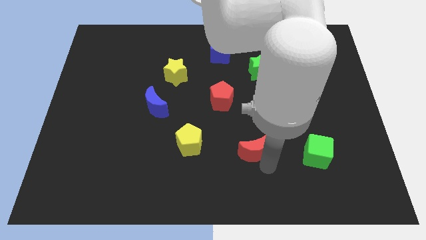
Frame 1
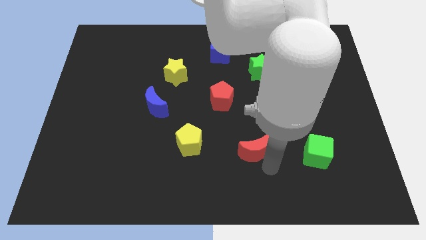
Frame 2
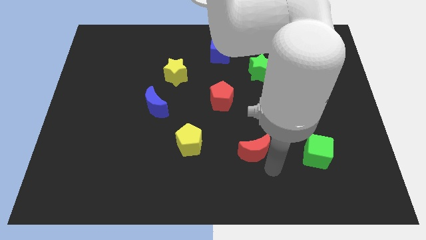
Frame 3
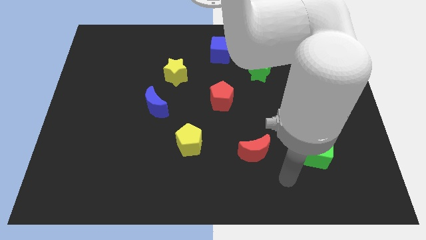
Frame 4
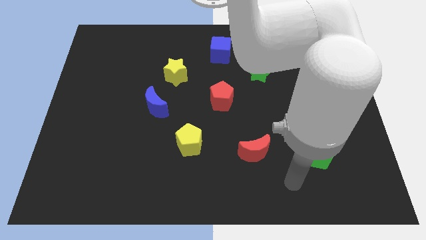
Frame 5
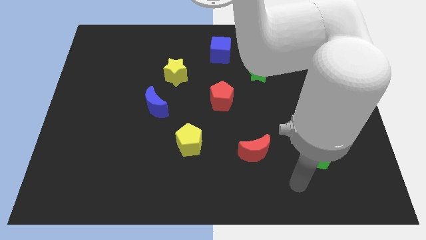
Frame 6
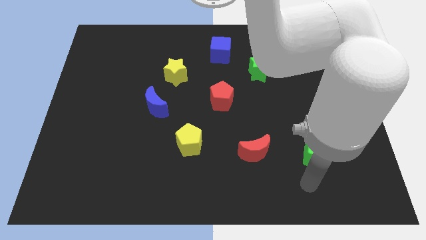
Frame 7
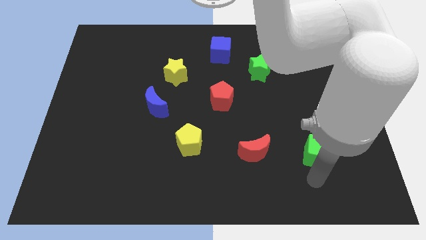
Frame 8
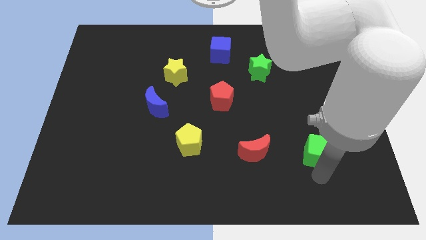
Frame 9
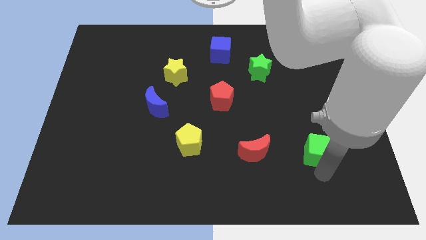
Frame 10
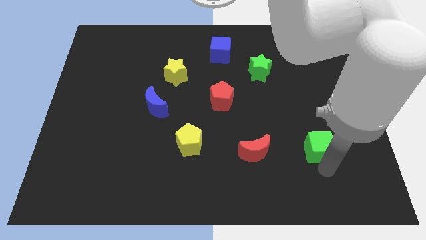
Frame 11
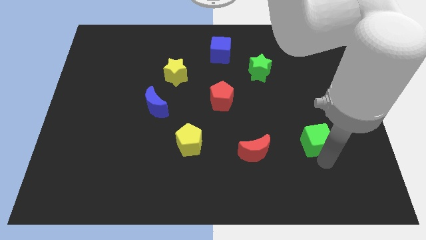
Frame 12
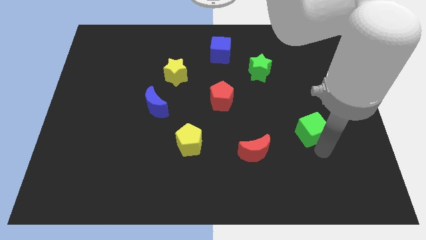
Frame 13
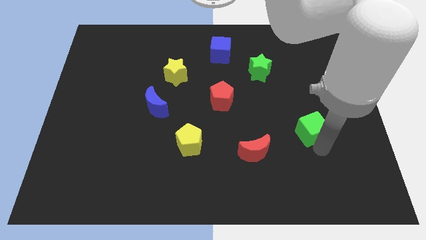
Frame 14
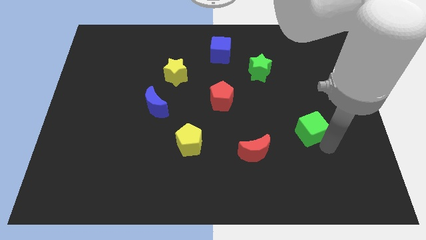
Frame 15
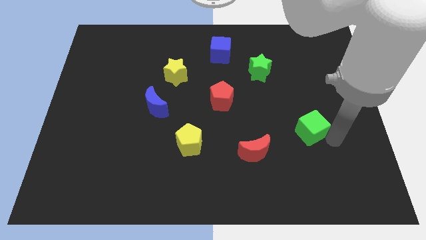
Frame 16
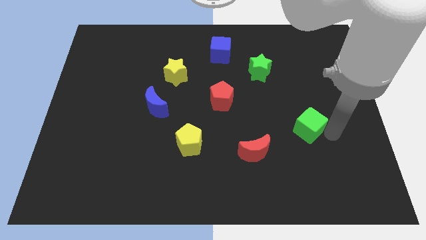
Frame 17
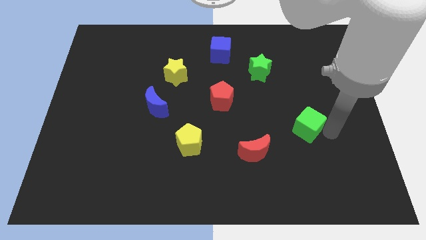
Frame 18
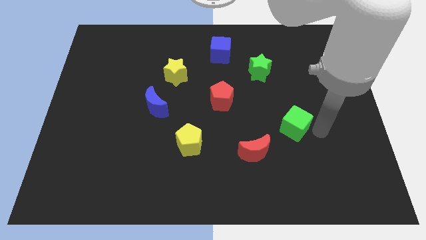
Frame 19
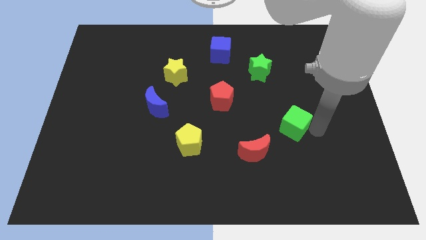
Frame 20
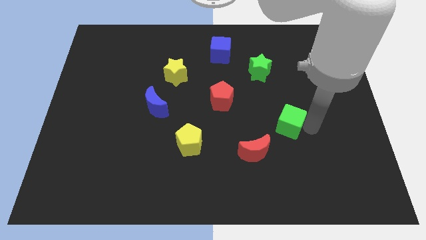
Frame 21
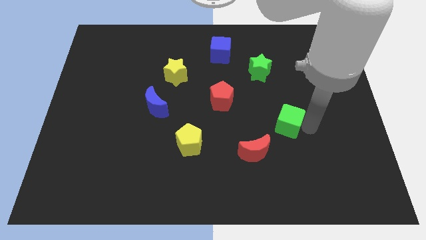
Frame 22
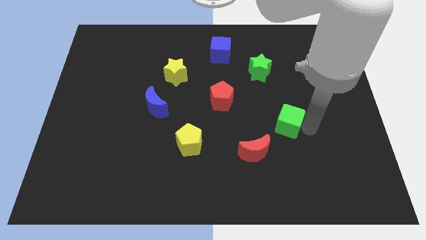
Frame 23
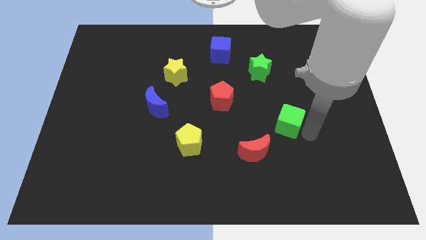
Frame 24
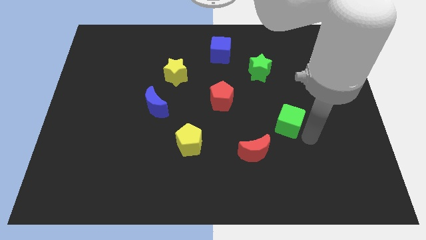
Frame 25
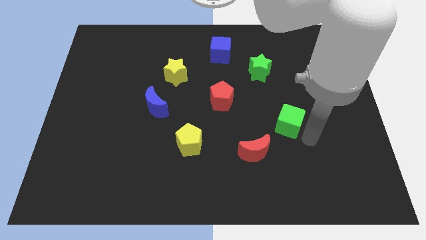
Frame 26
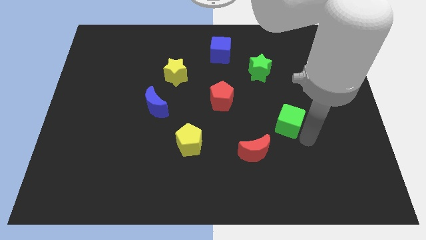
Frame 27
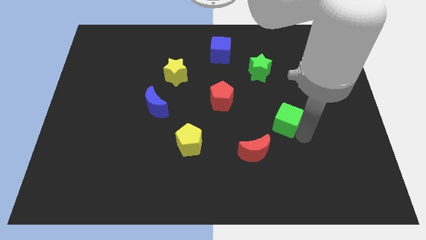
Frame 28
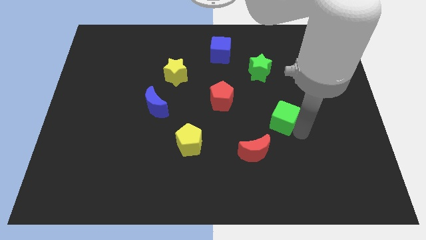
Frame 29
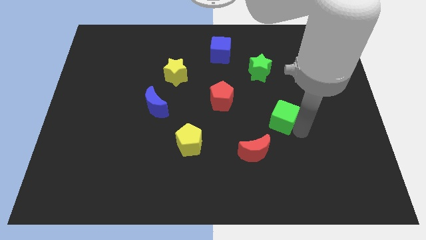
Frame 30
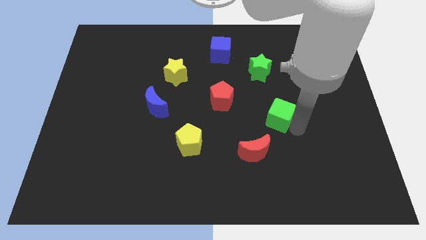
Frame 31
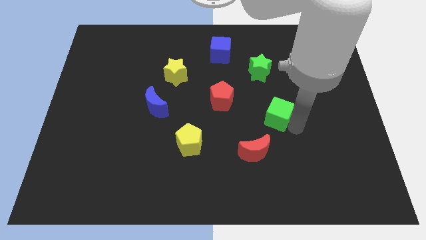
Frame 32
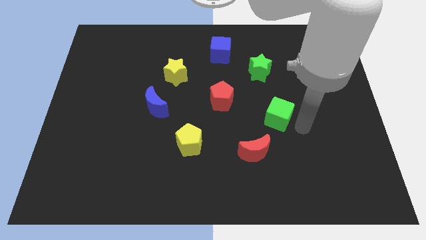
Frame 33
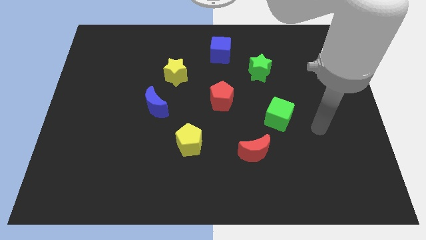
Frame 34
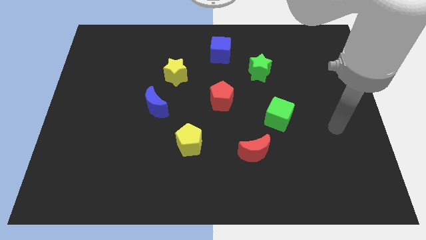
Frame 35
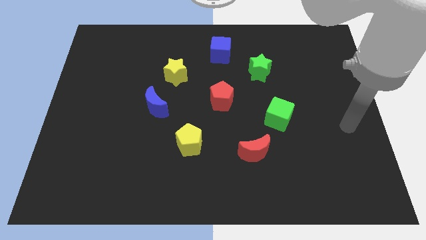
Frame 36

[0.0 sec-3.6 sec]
push the green cube towards the red pentagon

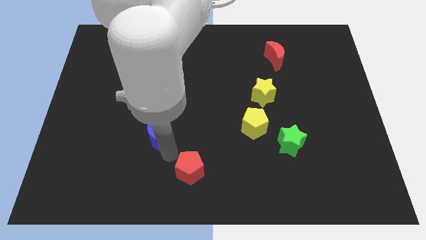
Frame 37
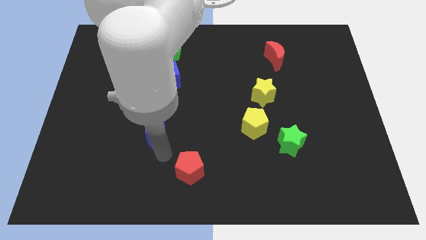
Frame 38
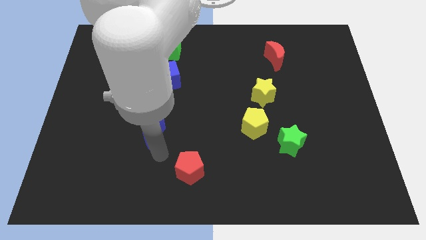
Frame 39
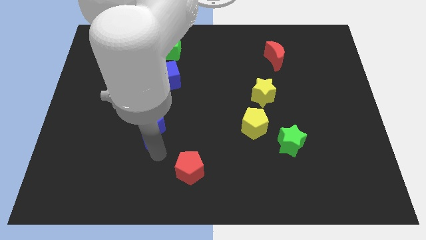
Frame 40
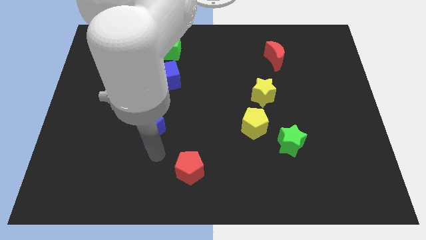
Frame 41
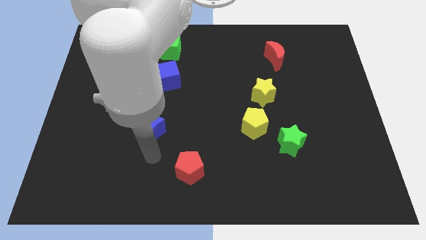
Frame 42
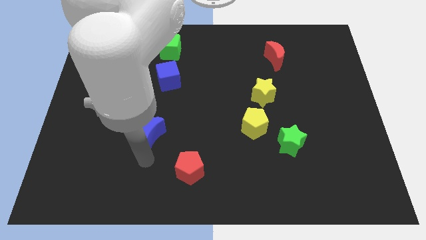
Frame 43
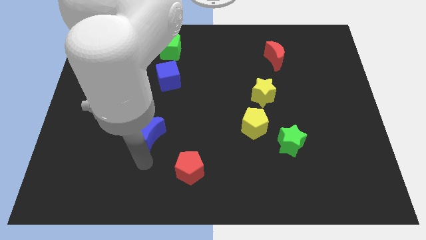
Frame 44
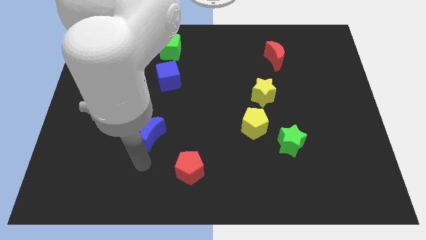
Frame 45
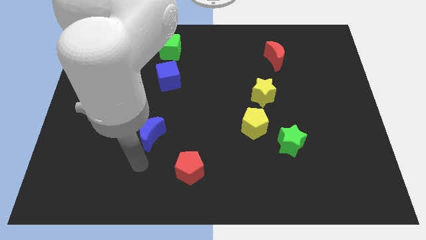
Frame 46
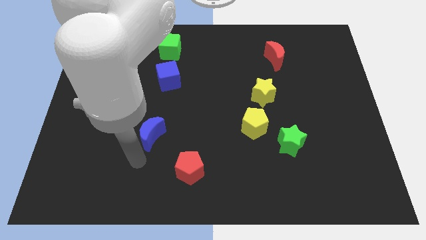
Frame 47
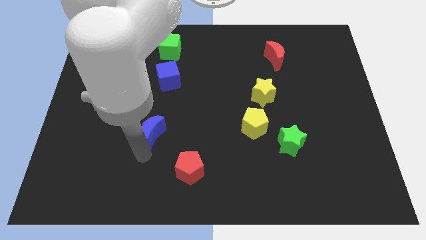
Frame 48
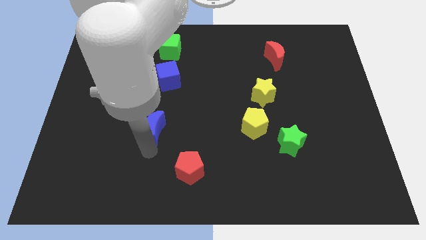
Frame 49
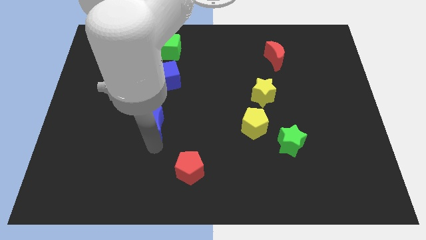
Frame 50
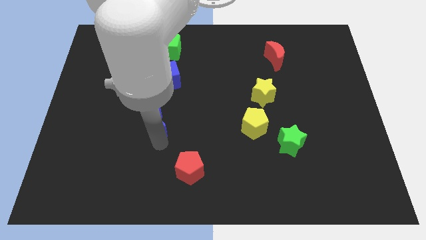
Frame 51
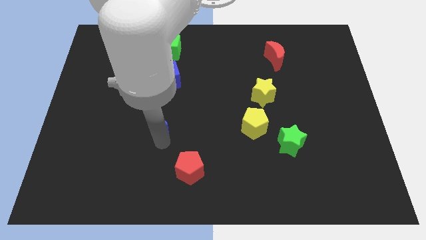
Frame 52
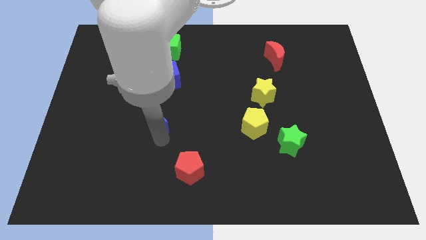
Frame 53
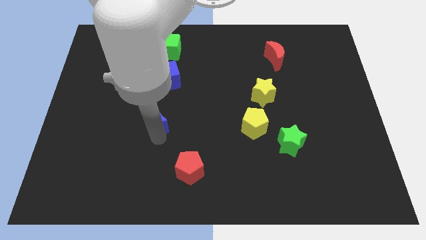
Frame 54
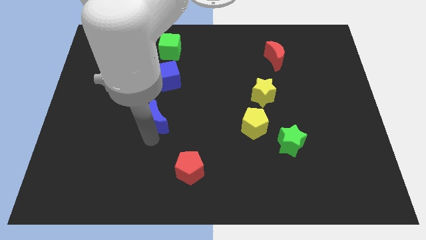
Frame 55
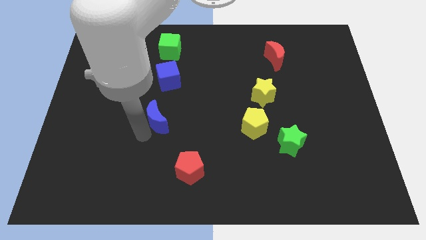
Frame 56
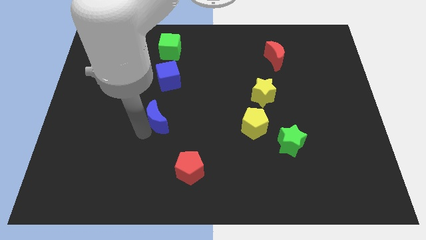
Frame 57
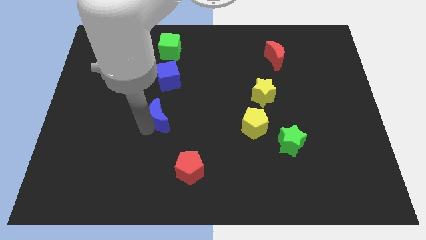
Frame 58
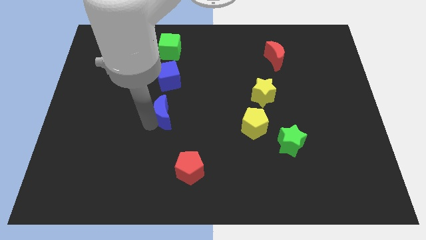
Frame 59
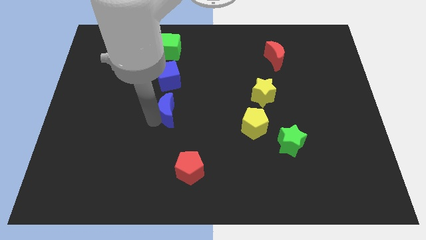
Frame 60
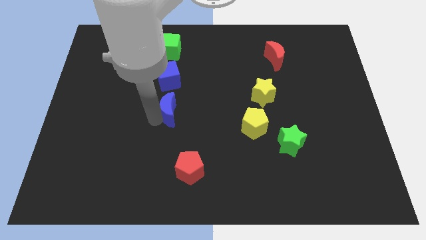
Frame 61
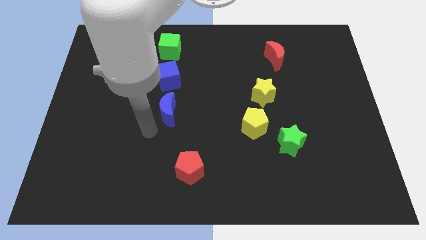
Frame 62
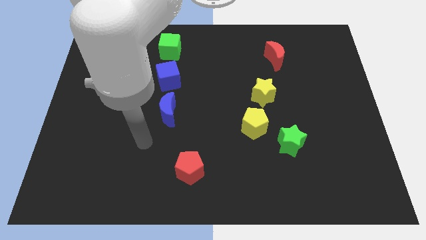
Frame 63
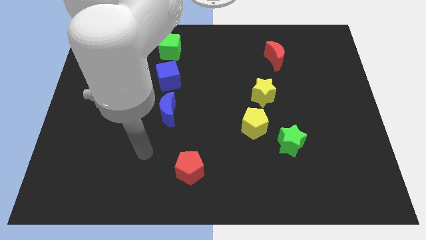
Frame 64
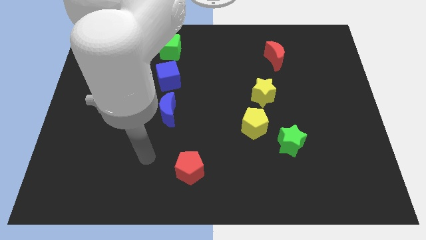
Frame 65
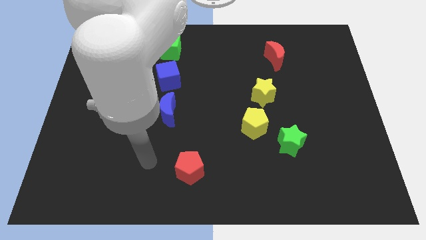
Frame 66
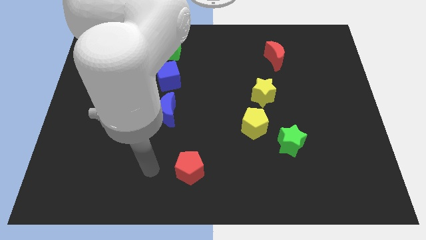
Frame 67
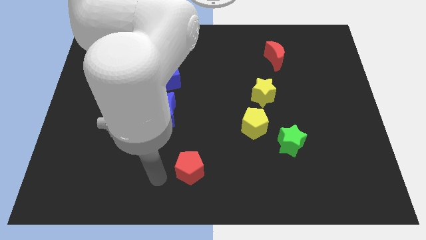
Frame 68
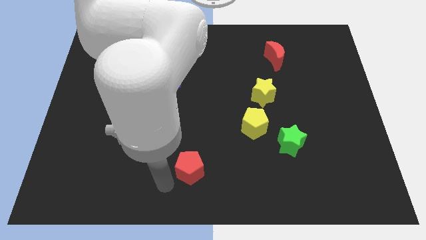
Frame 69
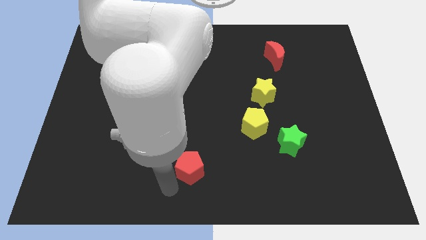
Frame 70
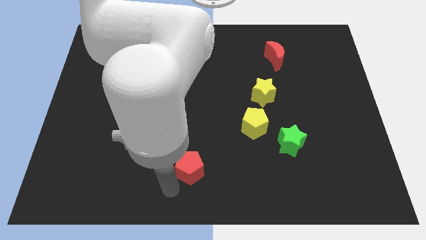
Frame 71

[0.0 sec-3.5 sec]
push the blue crescent towards the center of the board

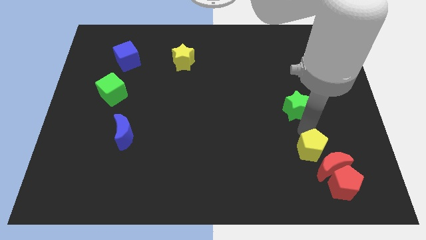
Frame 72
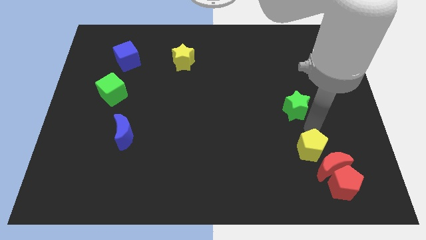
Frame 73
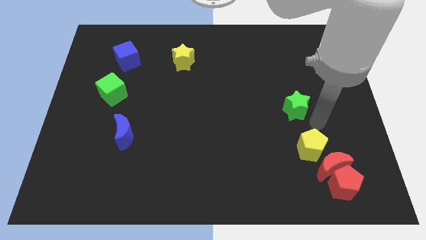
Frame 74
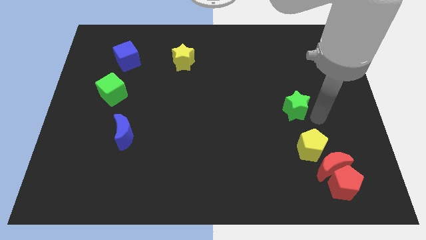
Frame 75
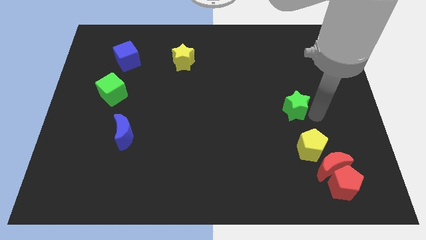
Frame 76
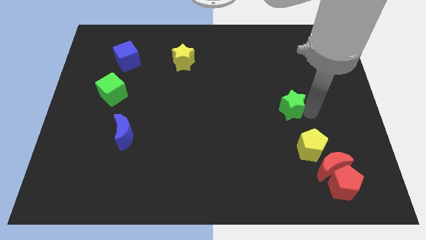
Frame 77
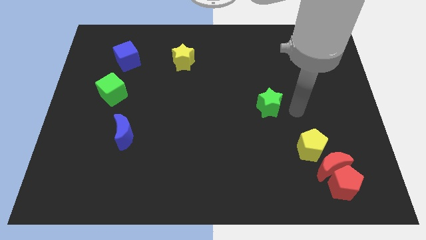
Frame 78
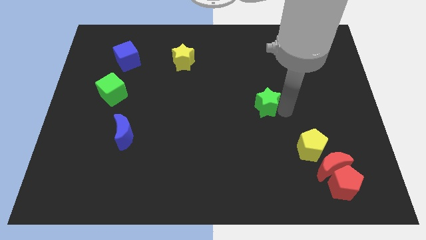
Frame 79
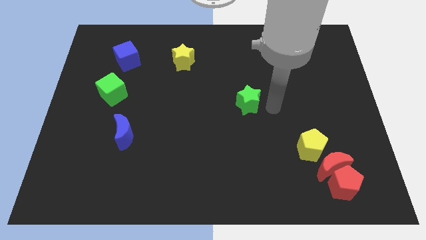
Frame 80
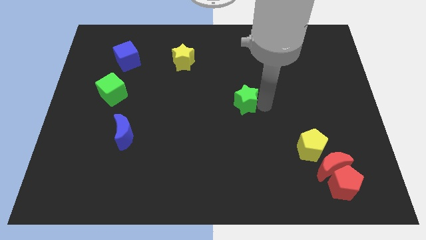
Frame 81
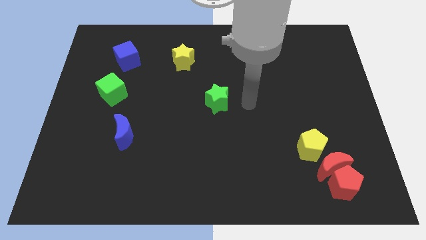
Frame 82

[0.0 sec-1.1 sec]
move the green star to the center of the board

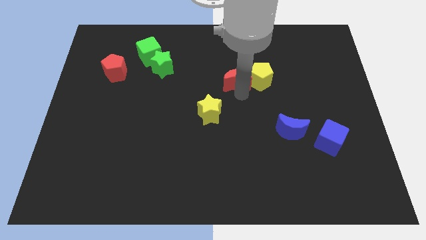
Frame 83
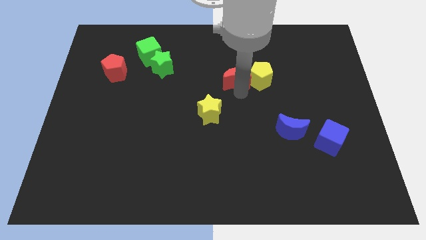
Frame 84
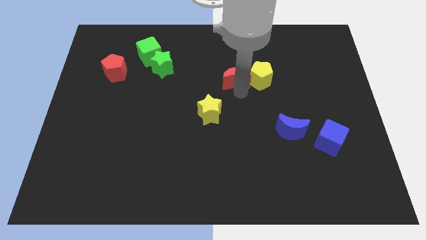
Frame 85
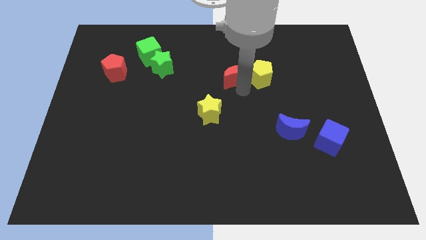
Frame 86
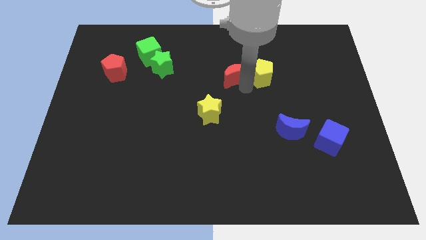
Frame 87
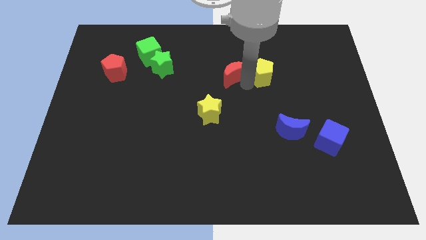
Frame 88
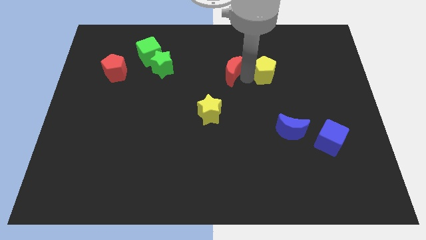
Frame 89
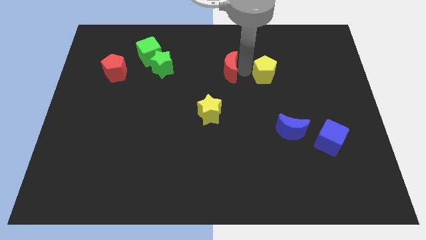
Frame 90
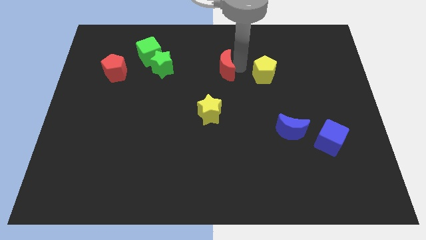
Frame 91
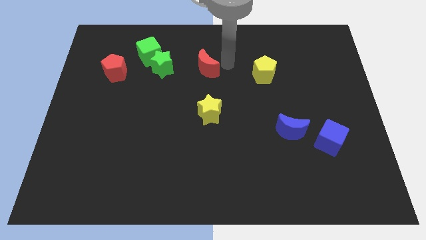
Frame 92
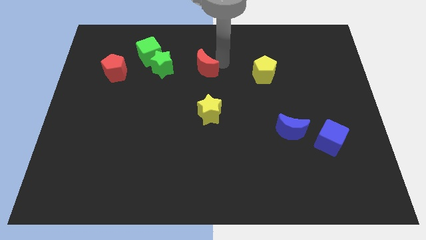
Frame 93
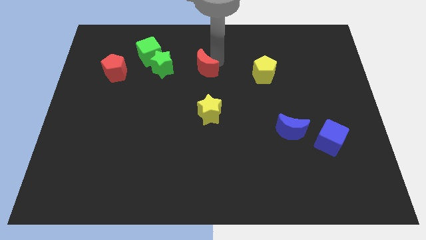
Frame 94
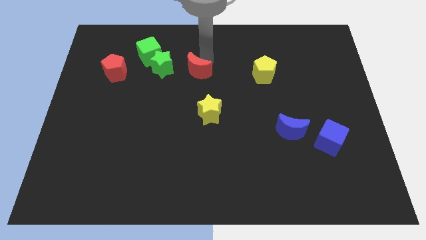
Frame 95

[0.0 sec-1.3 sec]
separate the red crescent away from the yellow pentagon
